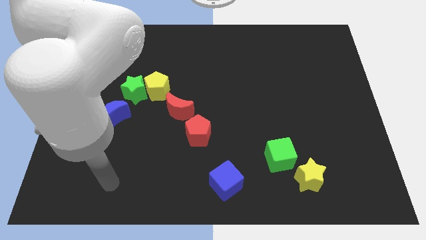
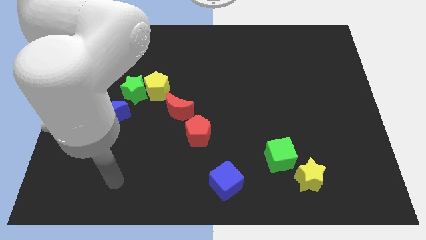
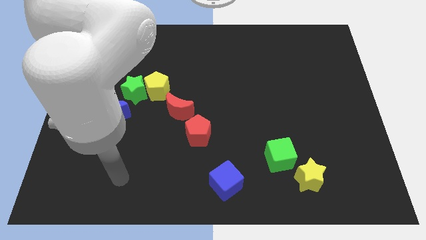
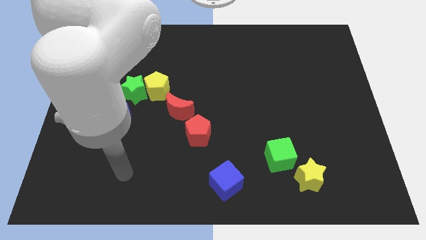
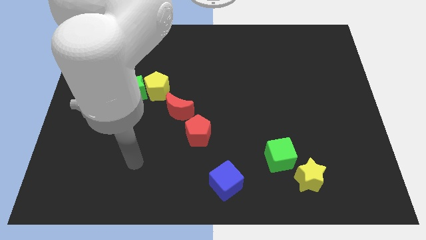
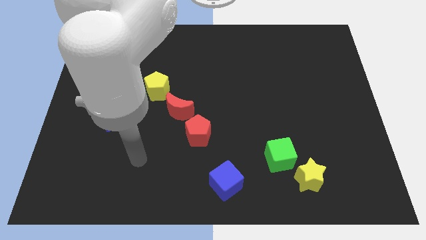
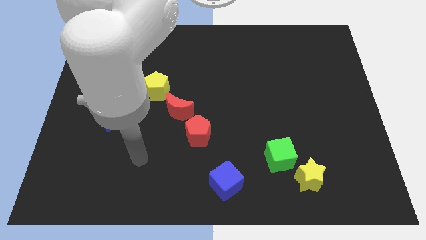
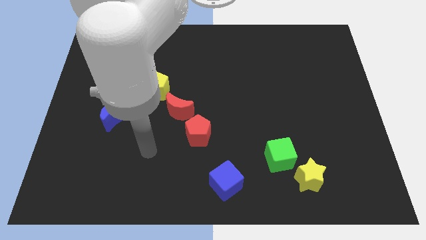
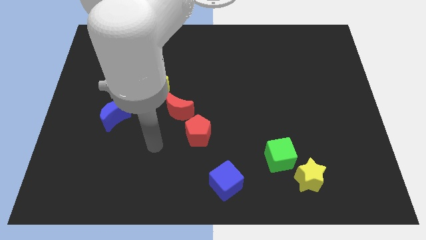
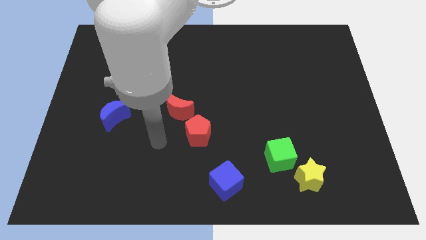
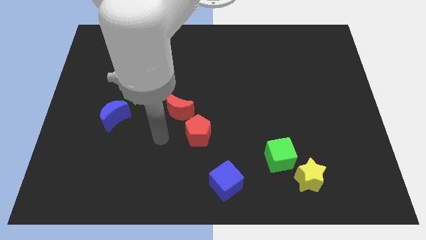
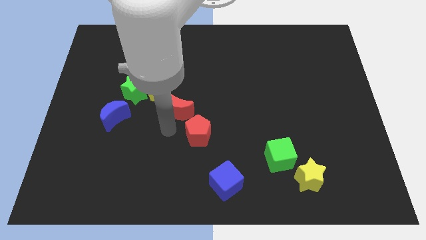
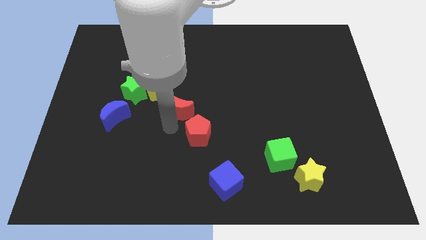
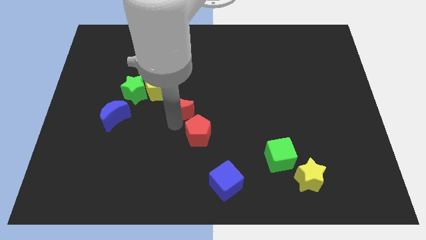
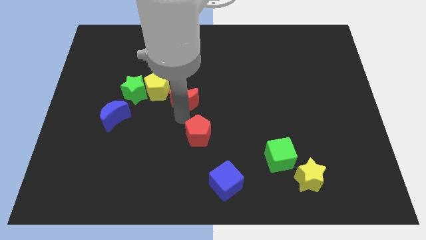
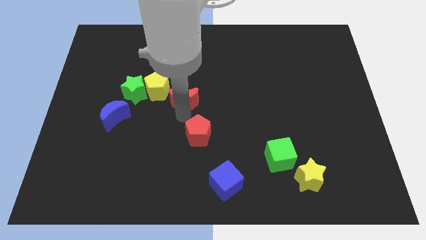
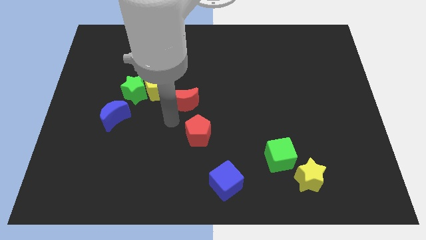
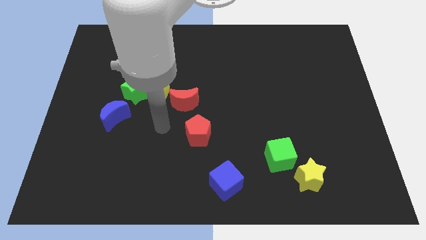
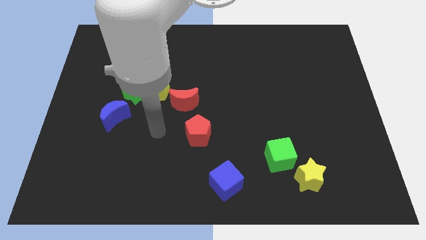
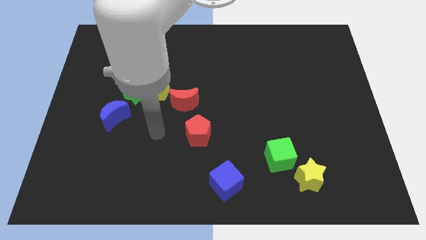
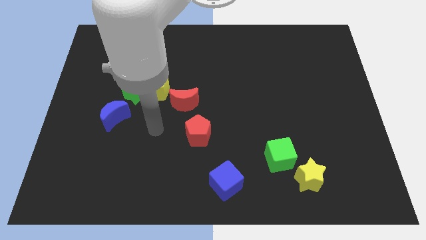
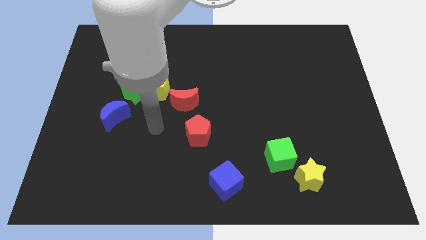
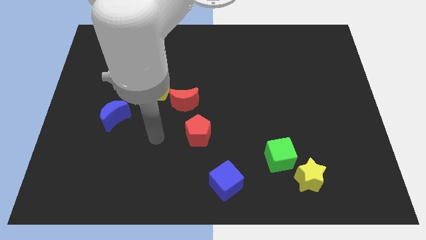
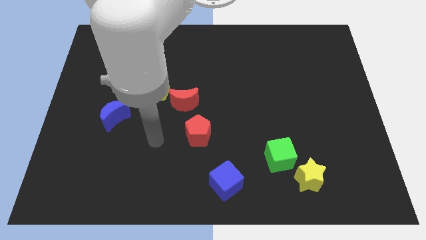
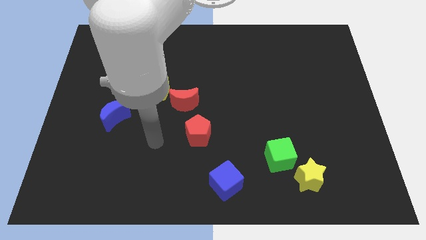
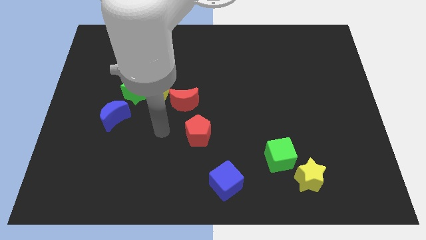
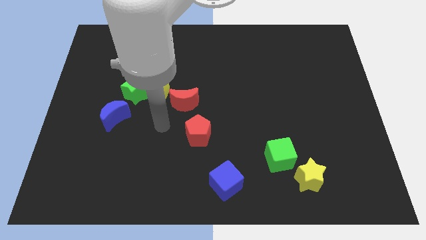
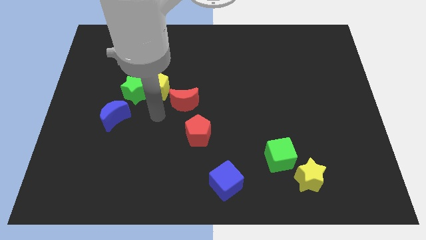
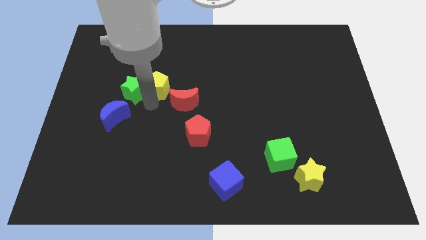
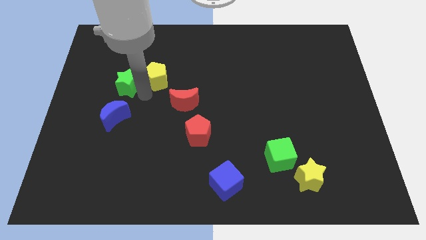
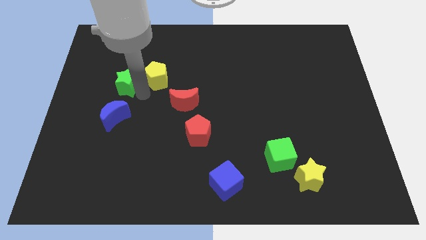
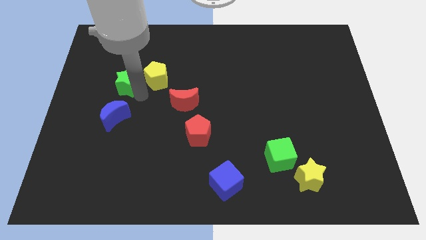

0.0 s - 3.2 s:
move the red crescent and yellow pentagon diagonally on the top left side of the red pentagon

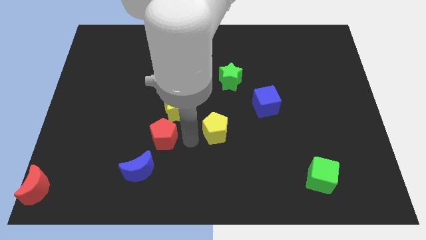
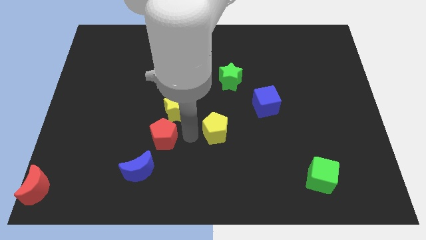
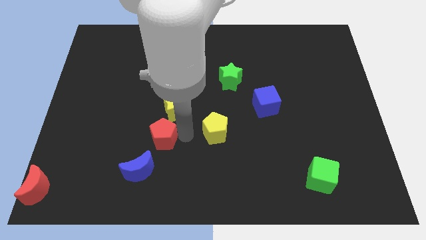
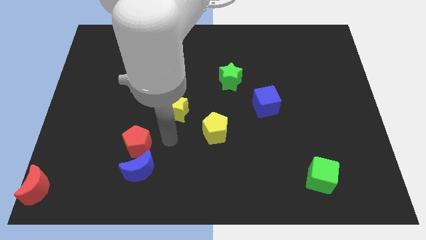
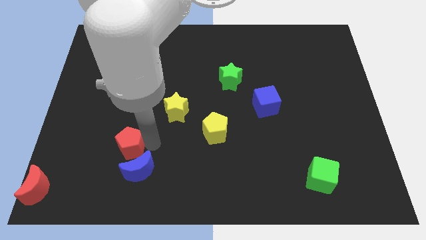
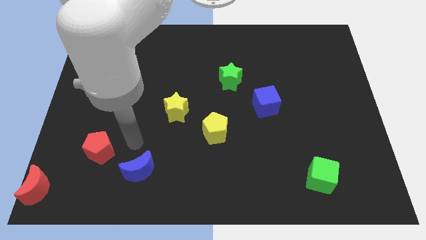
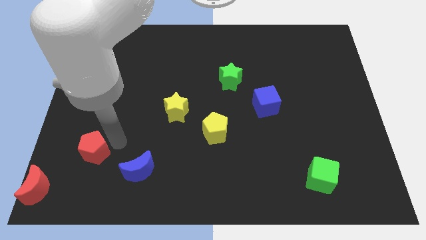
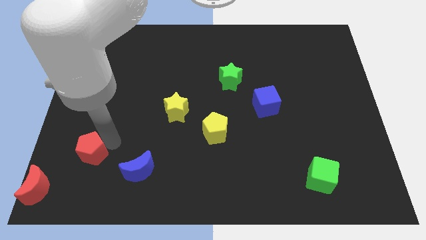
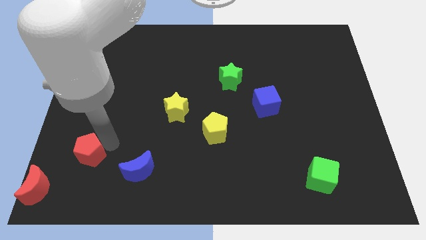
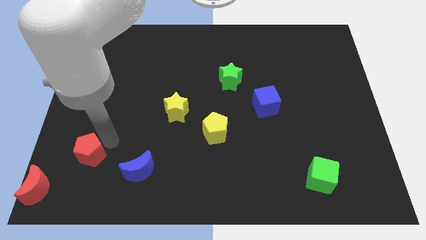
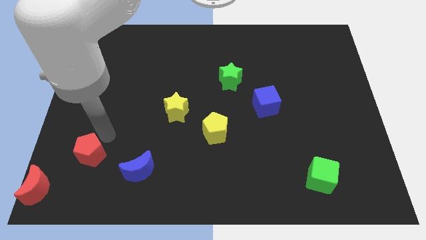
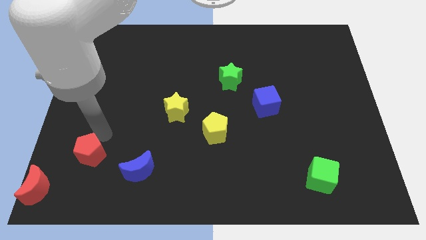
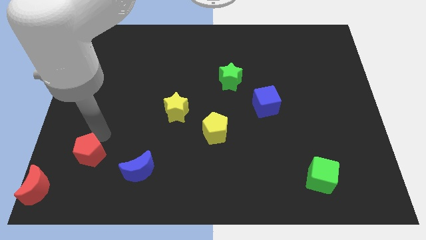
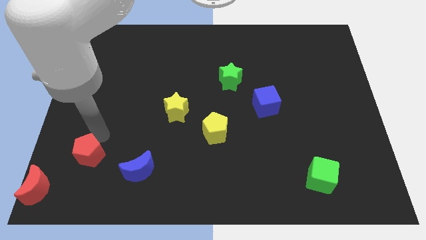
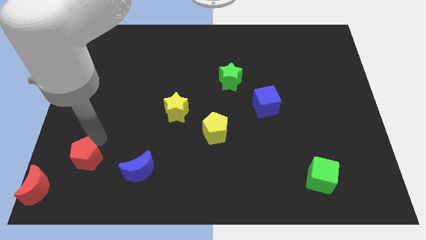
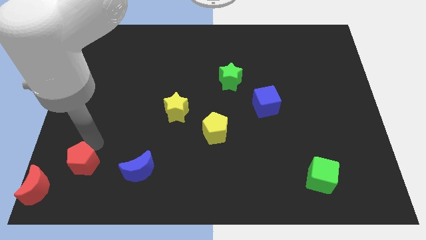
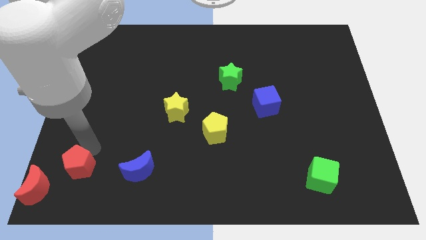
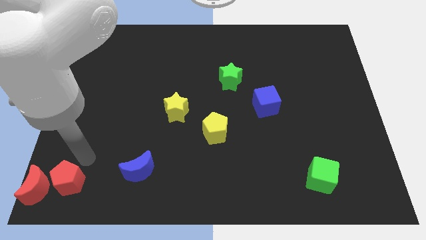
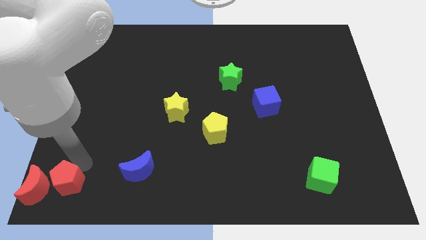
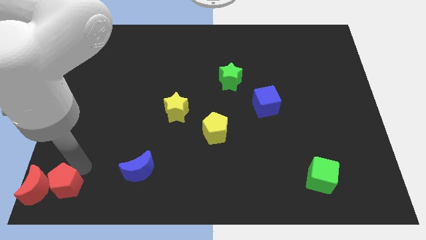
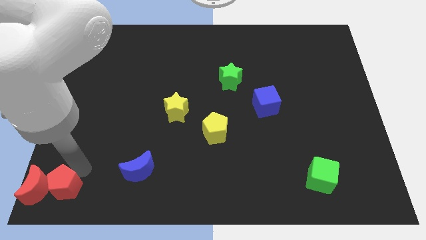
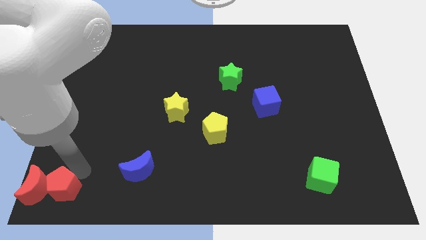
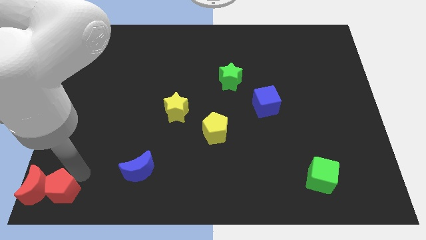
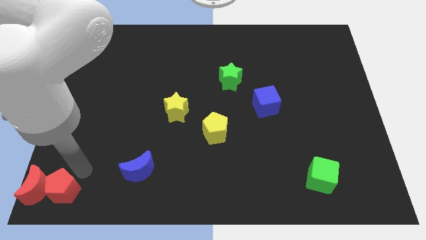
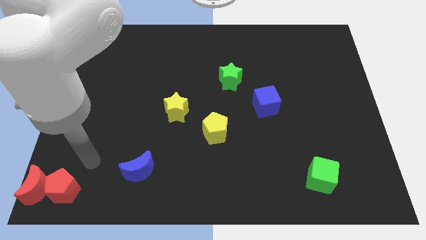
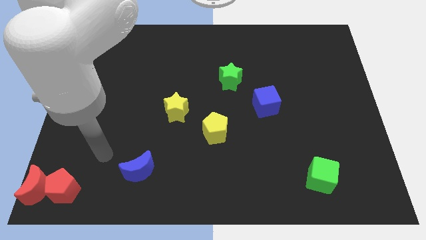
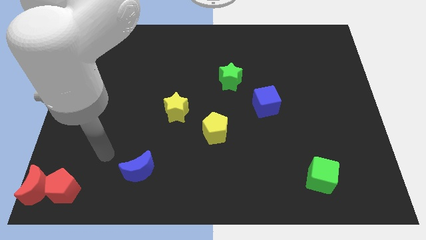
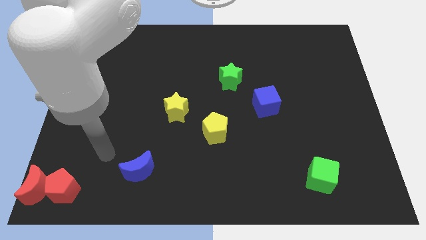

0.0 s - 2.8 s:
move the red pentagon to the right of the red moon

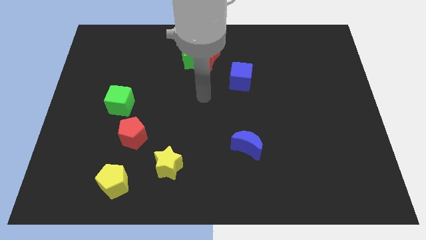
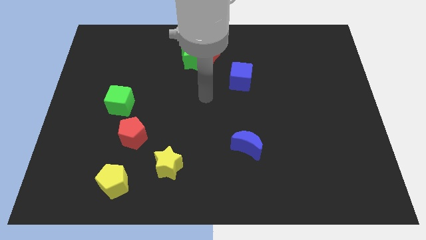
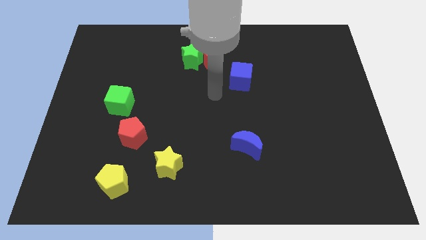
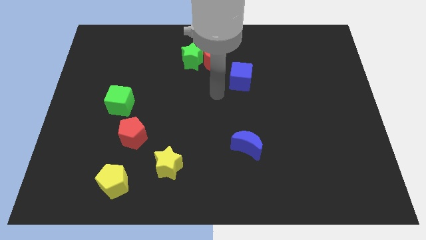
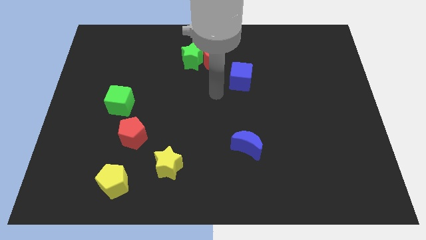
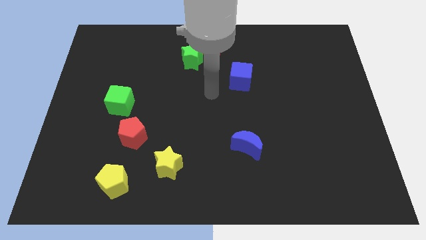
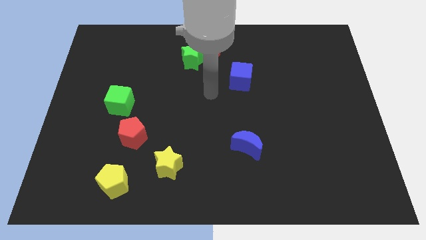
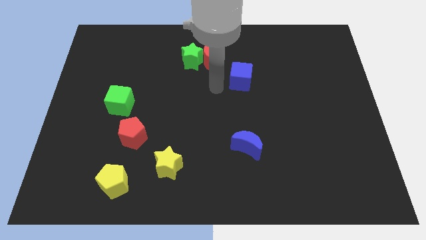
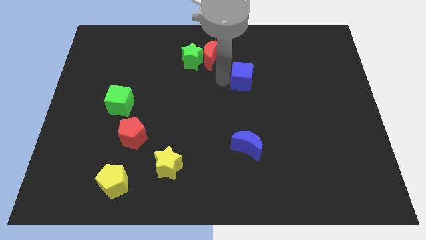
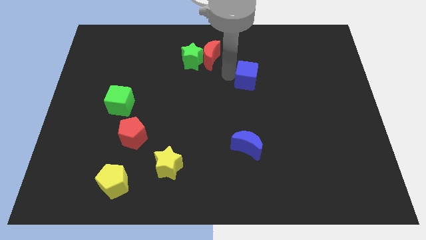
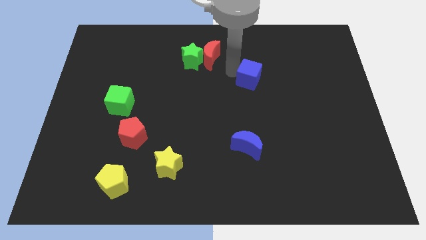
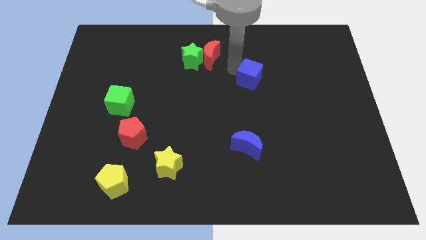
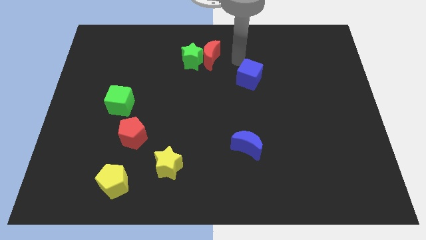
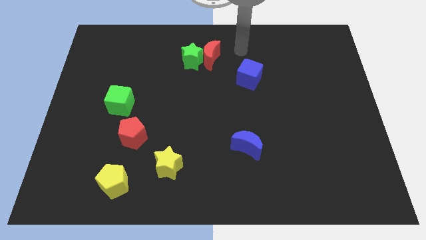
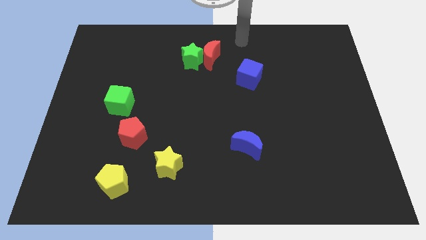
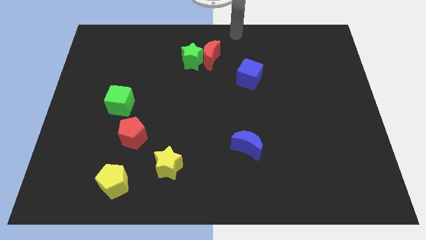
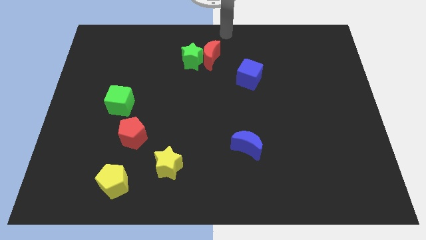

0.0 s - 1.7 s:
tap at the left side of the blue cube

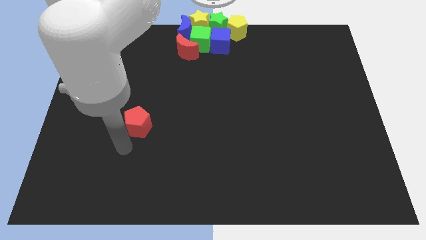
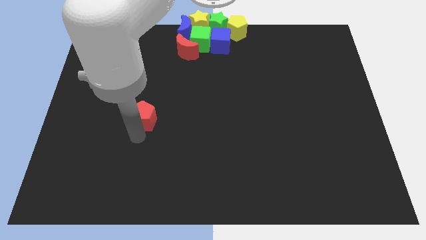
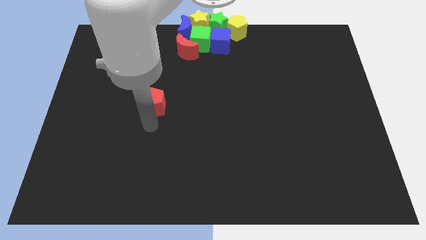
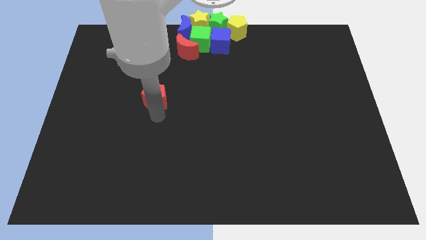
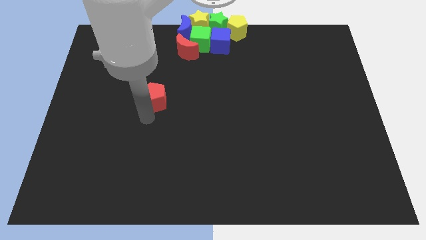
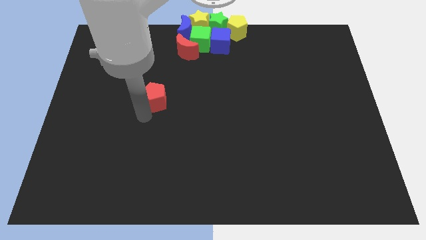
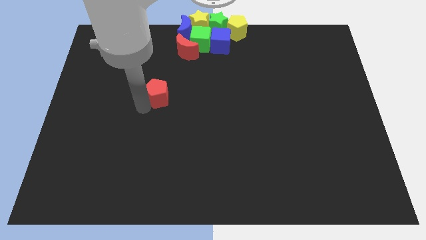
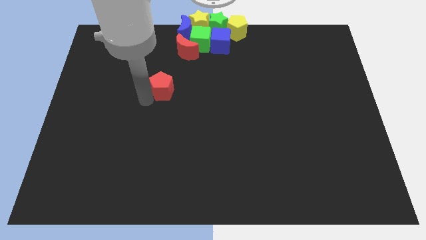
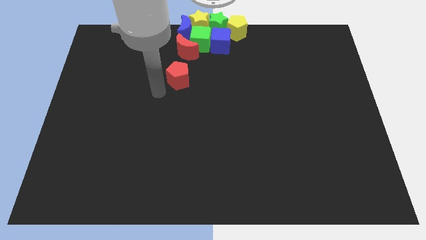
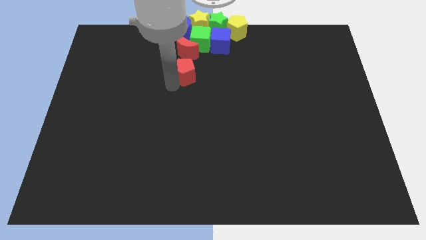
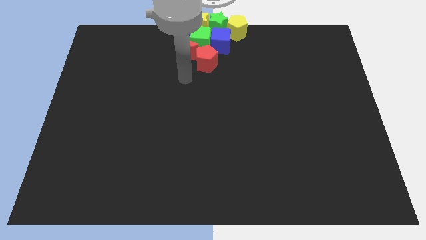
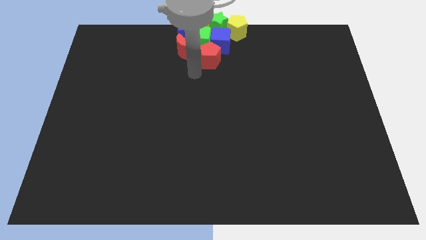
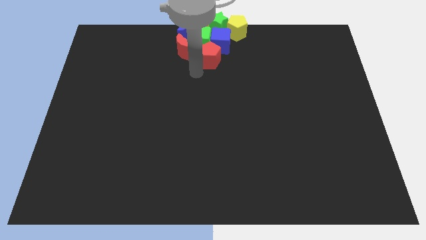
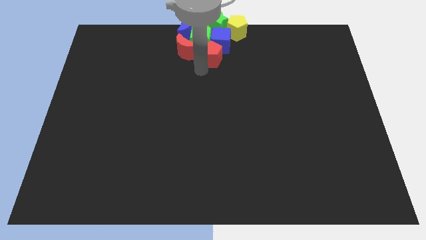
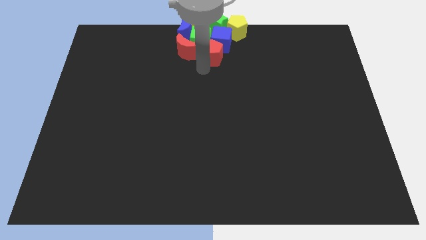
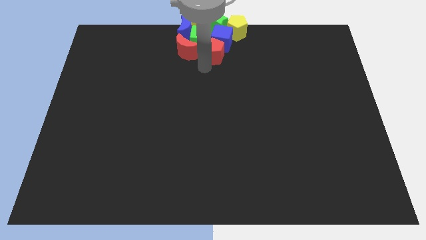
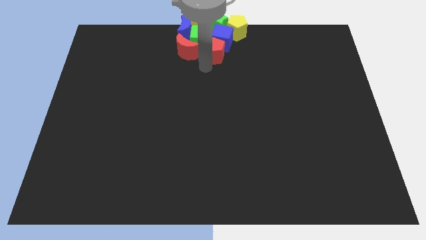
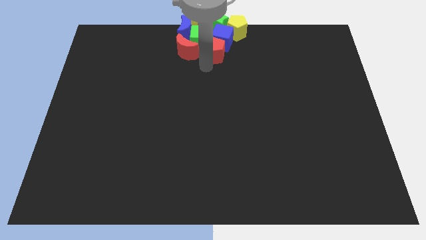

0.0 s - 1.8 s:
move the red pentagon below the blue cube
